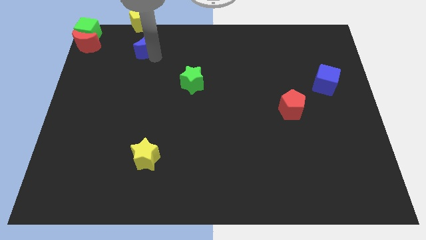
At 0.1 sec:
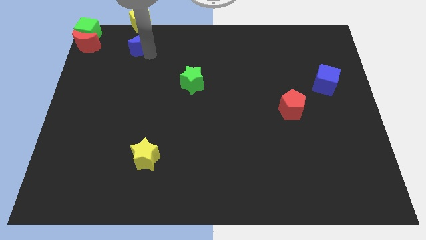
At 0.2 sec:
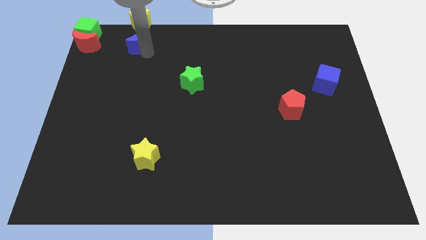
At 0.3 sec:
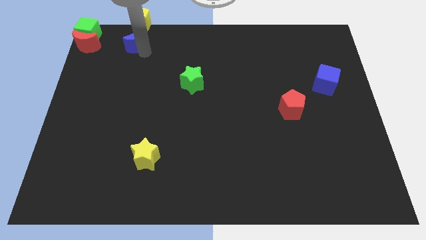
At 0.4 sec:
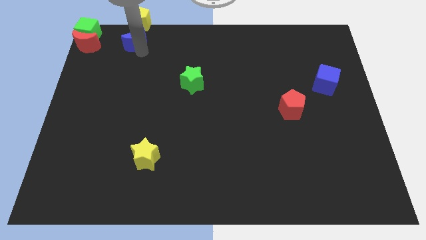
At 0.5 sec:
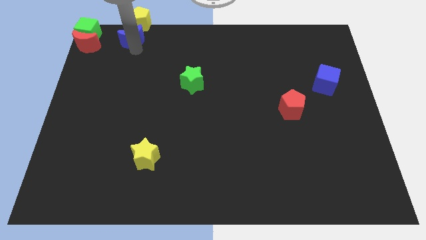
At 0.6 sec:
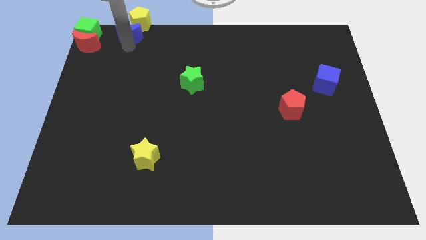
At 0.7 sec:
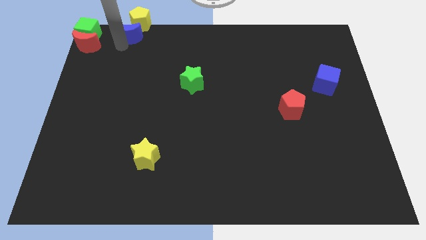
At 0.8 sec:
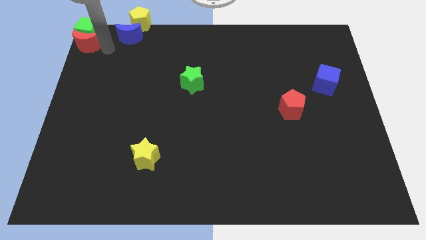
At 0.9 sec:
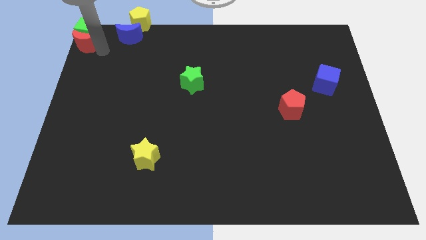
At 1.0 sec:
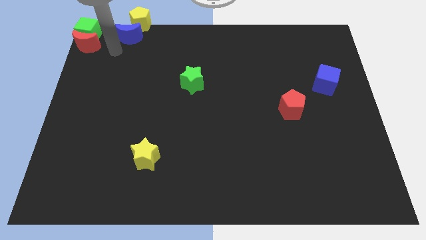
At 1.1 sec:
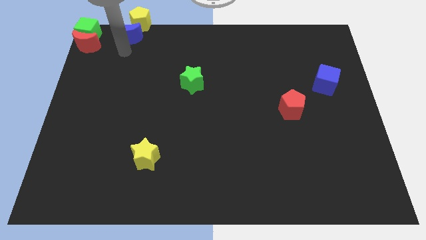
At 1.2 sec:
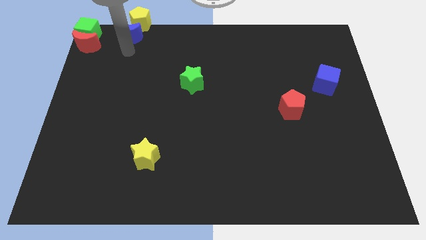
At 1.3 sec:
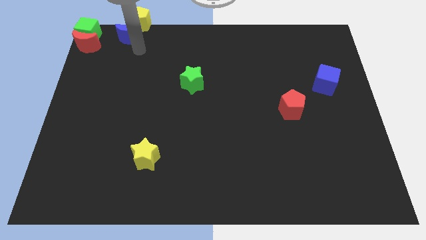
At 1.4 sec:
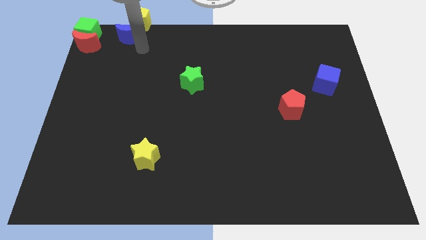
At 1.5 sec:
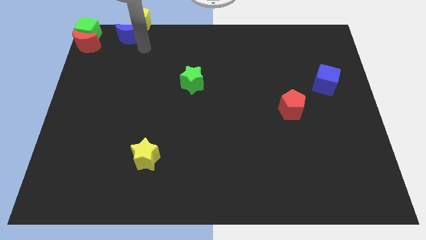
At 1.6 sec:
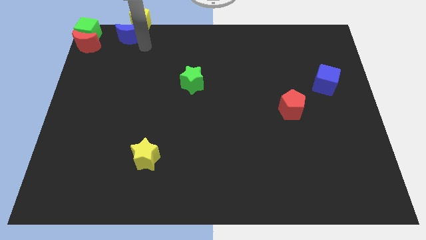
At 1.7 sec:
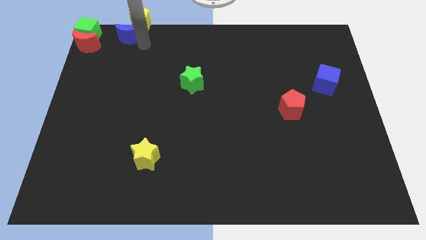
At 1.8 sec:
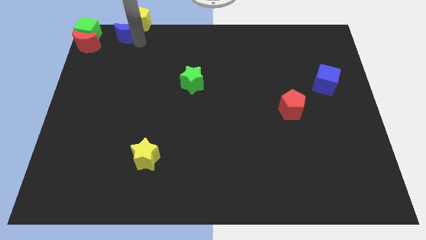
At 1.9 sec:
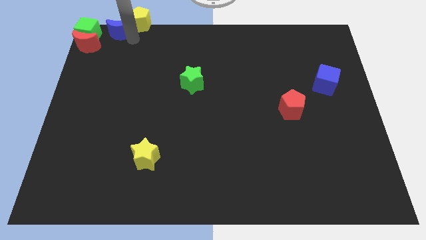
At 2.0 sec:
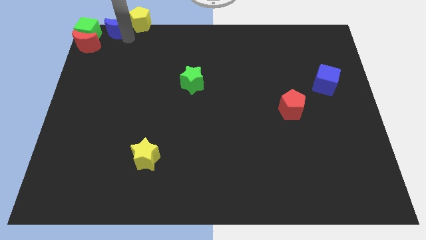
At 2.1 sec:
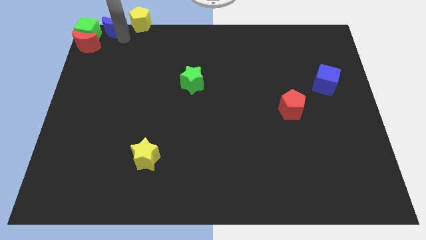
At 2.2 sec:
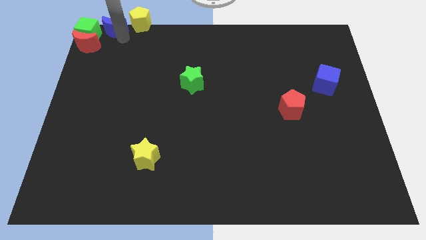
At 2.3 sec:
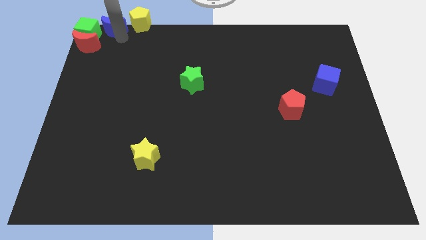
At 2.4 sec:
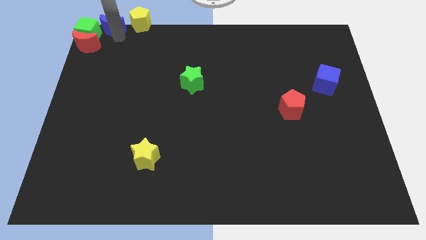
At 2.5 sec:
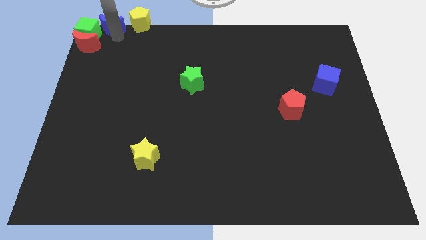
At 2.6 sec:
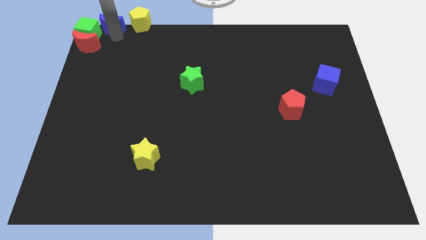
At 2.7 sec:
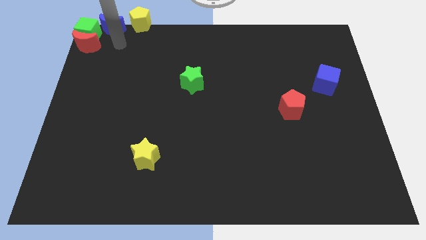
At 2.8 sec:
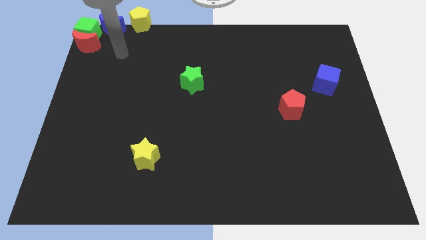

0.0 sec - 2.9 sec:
place blue crescent in between green cube and yellow pentagon

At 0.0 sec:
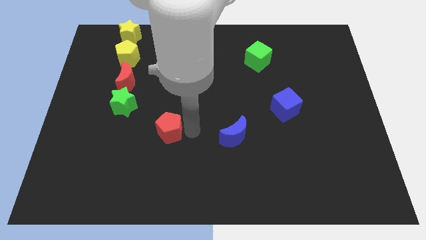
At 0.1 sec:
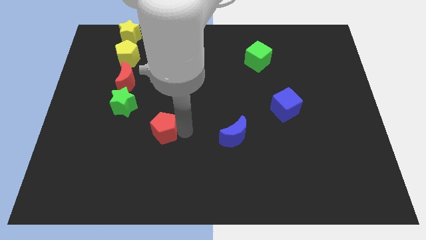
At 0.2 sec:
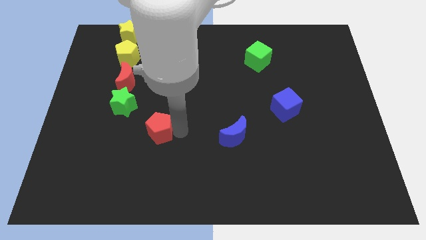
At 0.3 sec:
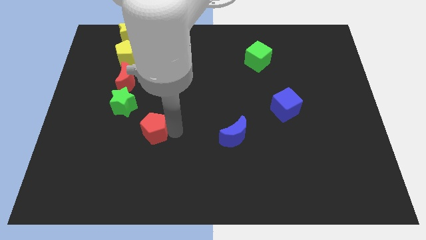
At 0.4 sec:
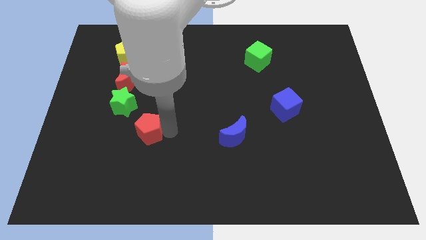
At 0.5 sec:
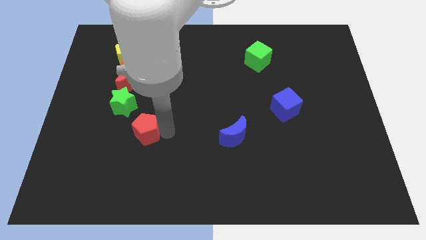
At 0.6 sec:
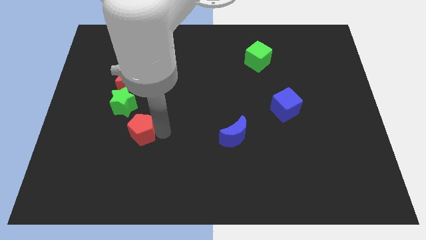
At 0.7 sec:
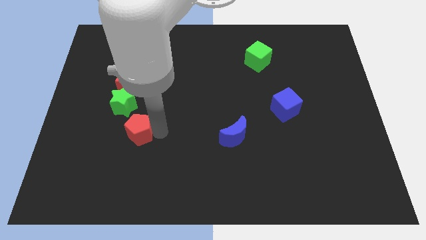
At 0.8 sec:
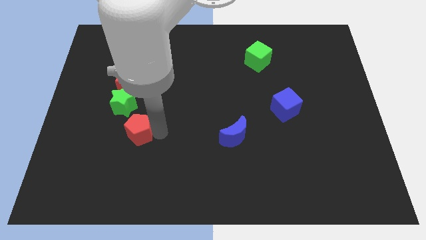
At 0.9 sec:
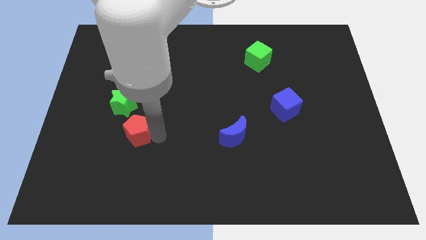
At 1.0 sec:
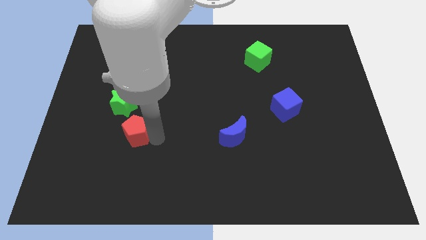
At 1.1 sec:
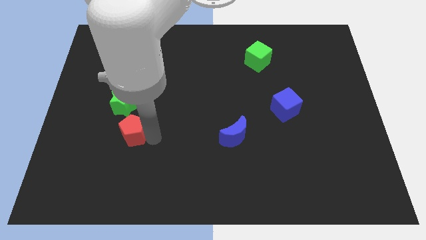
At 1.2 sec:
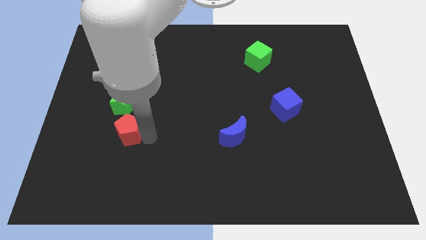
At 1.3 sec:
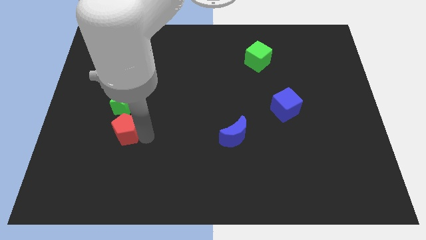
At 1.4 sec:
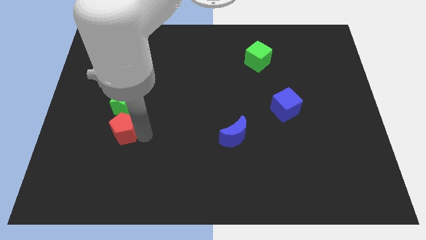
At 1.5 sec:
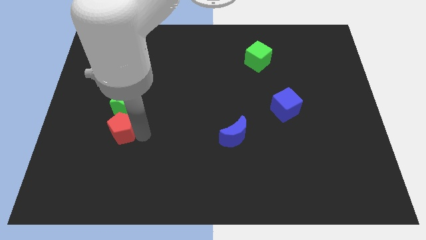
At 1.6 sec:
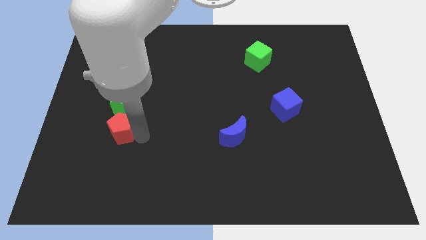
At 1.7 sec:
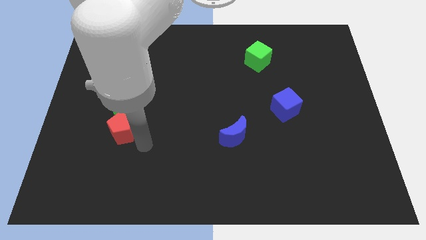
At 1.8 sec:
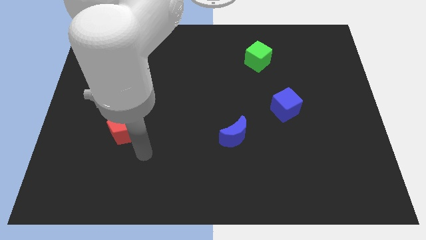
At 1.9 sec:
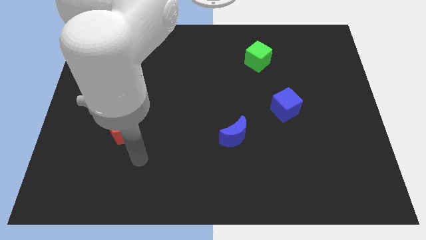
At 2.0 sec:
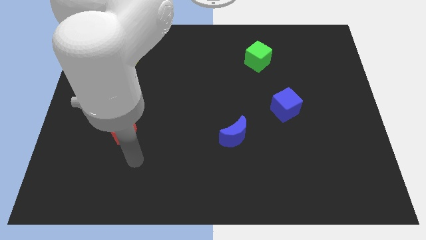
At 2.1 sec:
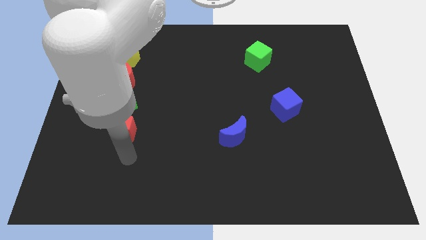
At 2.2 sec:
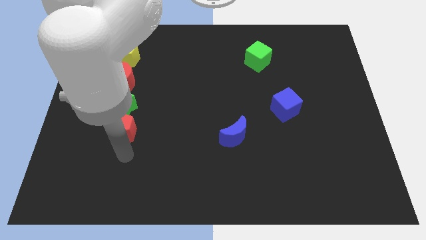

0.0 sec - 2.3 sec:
place the red pentagon below the green star

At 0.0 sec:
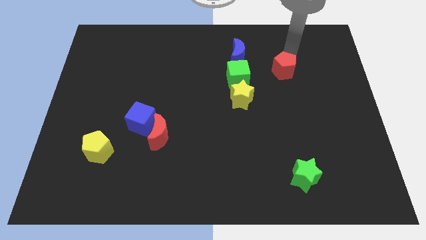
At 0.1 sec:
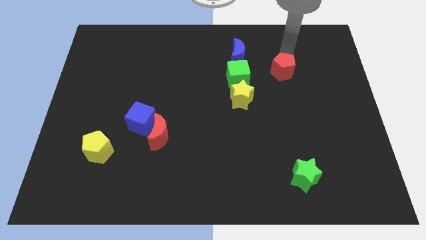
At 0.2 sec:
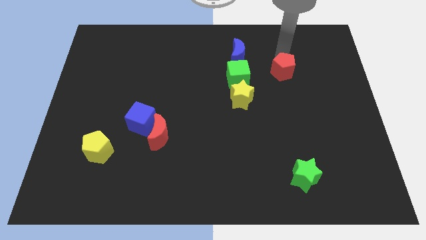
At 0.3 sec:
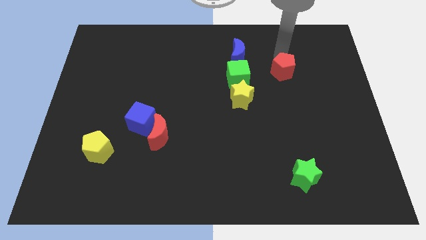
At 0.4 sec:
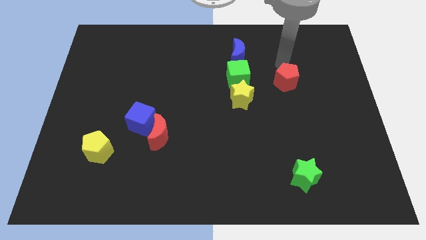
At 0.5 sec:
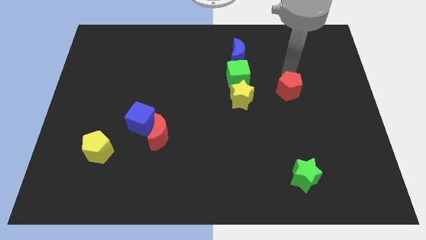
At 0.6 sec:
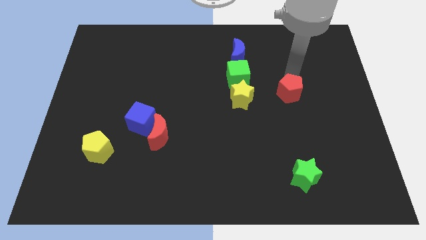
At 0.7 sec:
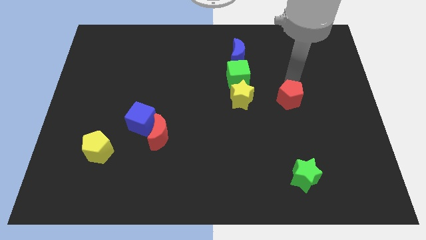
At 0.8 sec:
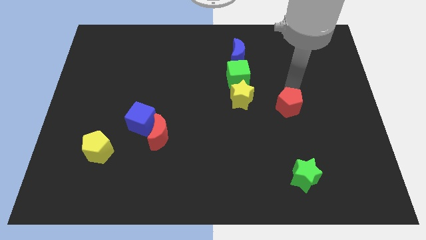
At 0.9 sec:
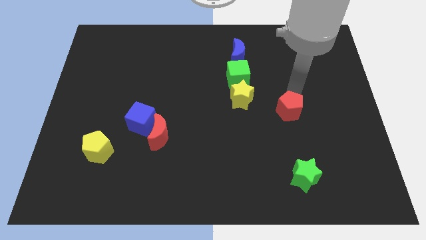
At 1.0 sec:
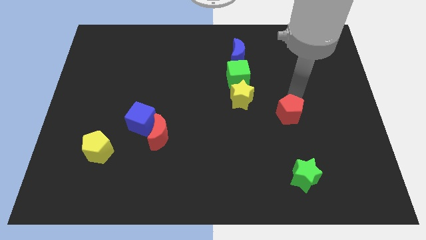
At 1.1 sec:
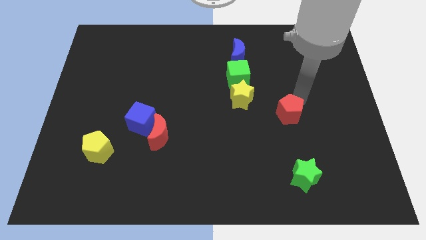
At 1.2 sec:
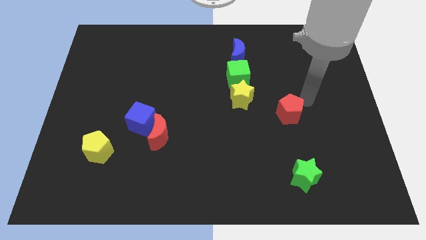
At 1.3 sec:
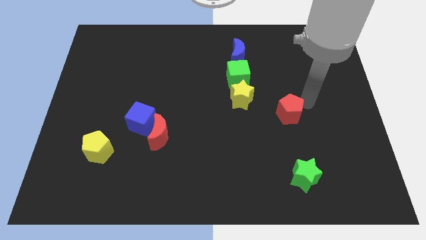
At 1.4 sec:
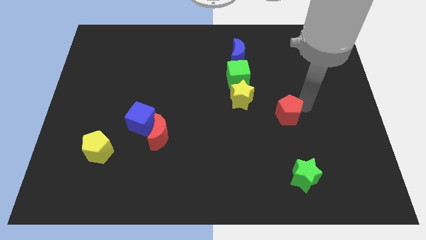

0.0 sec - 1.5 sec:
push red pentagon towards green star

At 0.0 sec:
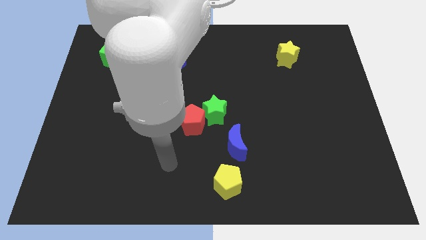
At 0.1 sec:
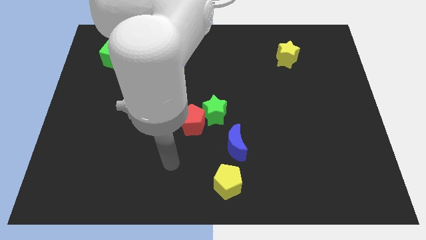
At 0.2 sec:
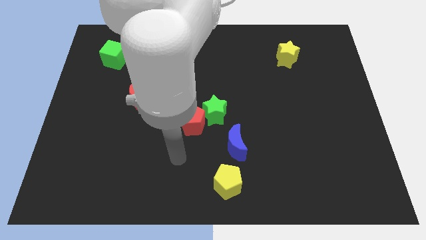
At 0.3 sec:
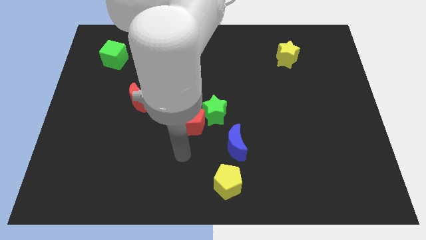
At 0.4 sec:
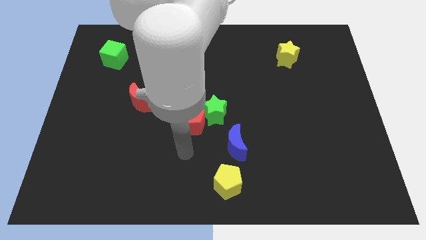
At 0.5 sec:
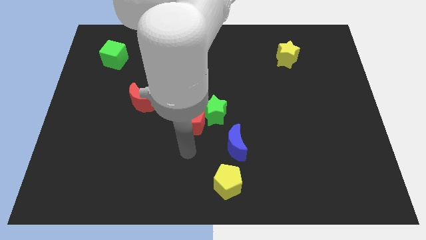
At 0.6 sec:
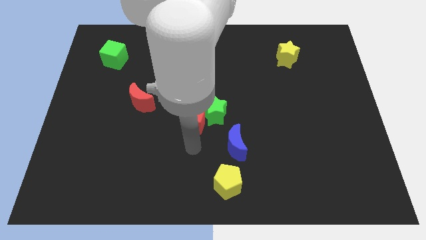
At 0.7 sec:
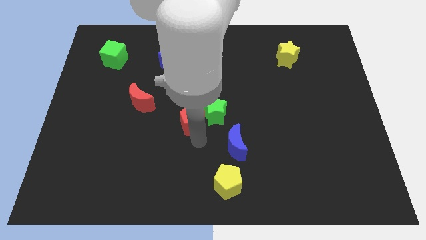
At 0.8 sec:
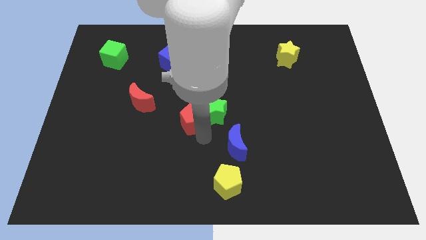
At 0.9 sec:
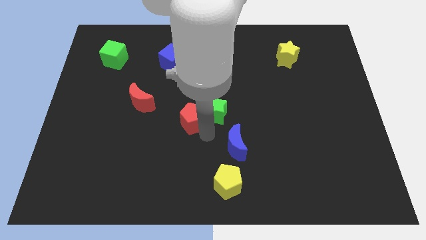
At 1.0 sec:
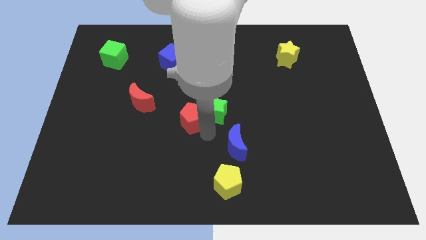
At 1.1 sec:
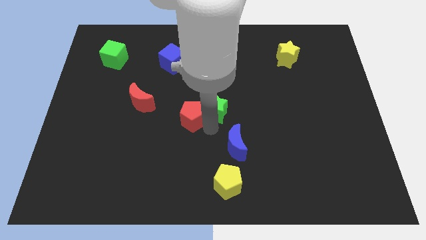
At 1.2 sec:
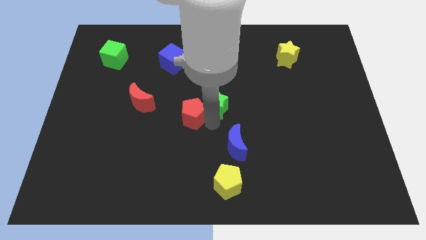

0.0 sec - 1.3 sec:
move the red pentagon slightly up

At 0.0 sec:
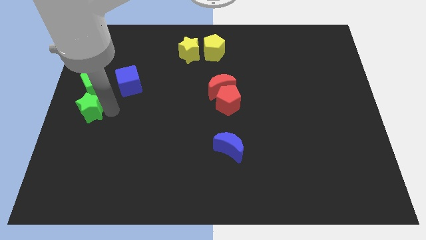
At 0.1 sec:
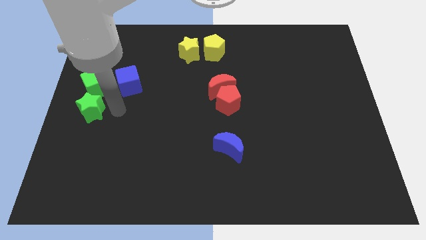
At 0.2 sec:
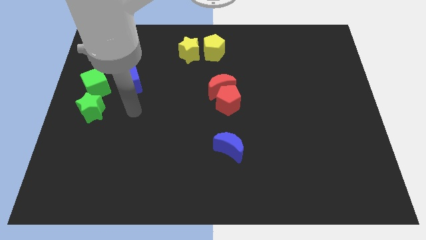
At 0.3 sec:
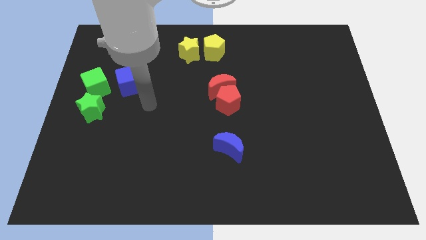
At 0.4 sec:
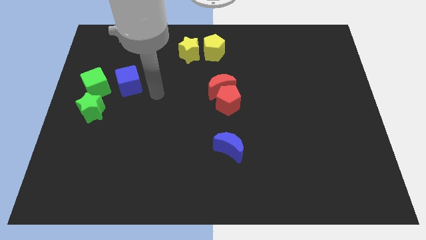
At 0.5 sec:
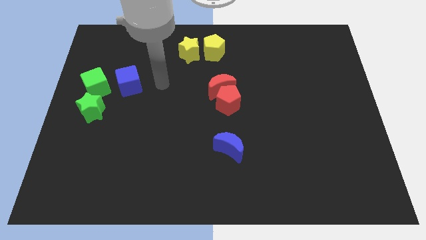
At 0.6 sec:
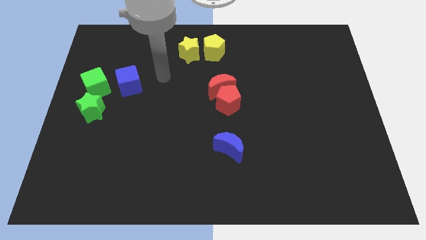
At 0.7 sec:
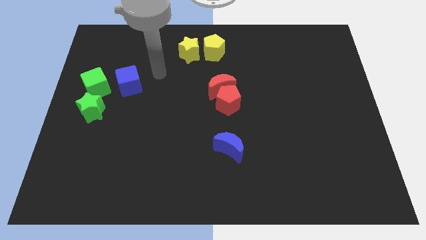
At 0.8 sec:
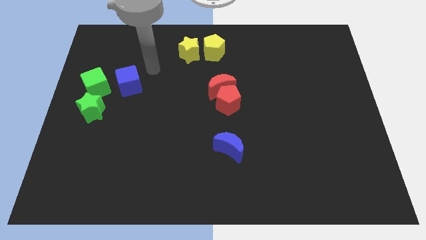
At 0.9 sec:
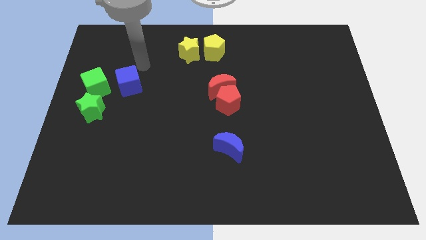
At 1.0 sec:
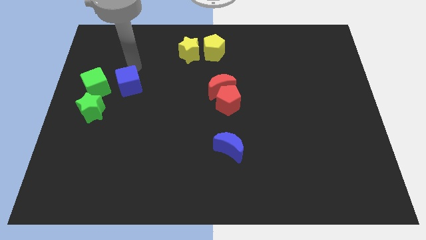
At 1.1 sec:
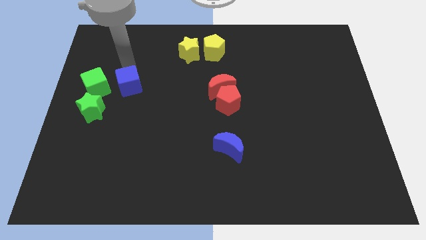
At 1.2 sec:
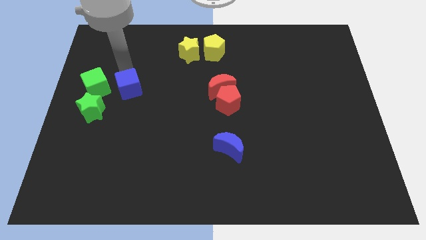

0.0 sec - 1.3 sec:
point your arm at the top of the blue cube
